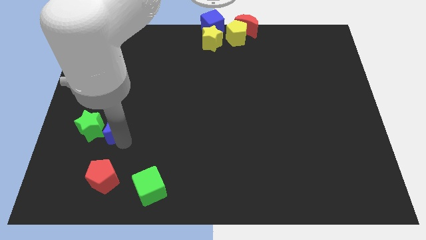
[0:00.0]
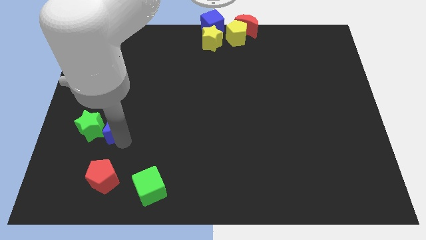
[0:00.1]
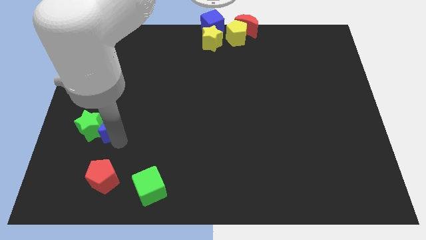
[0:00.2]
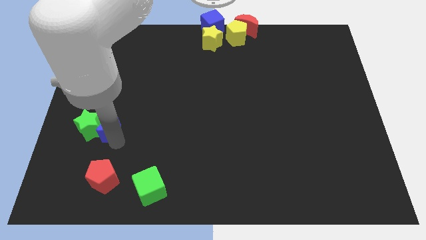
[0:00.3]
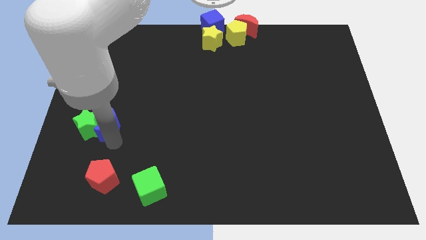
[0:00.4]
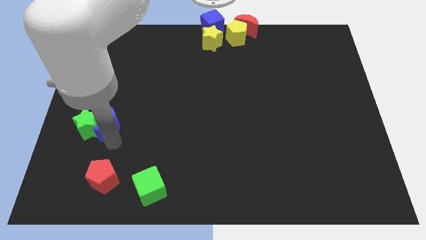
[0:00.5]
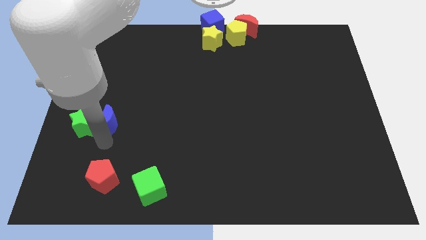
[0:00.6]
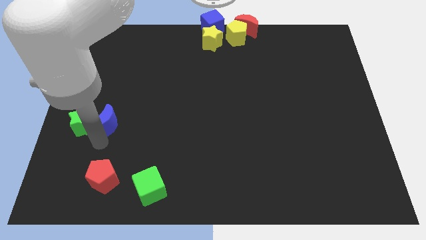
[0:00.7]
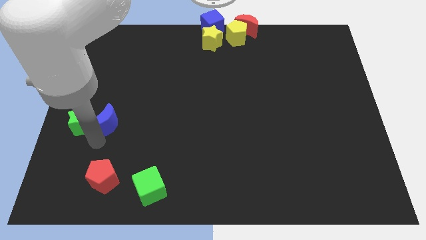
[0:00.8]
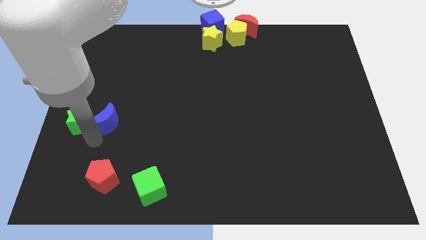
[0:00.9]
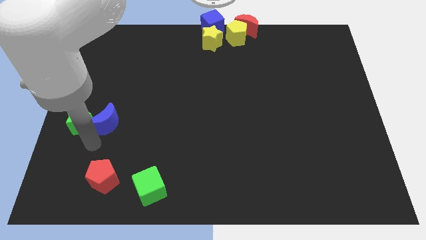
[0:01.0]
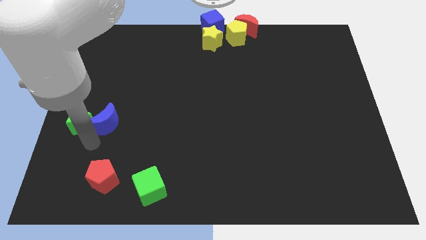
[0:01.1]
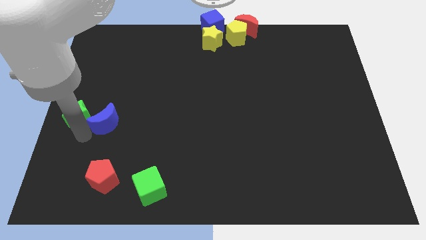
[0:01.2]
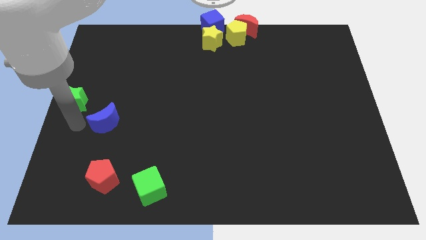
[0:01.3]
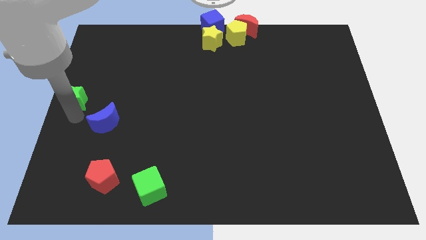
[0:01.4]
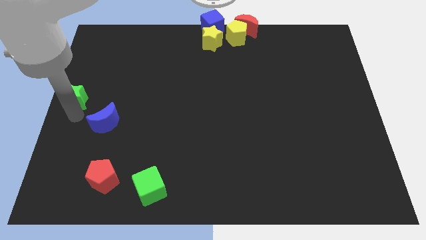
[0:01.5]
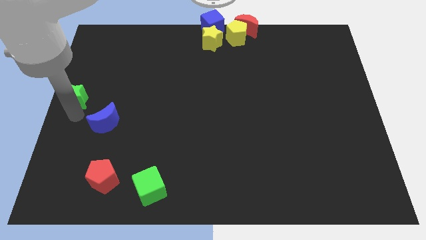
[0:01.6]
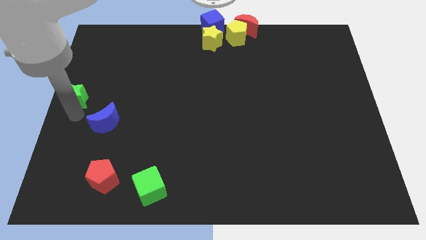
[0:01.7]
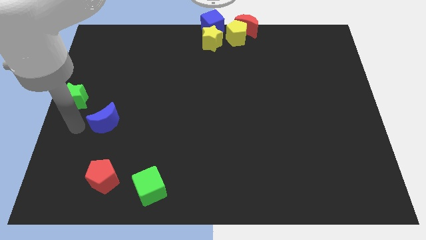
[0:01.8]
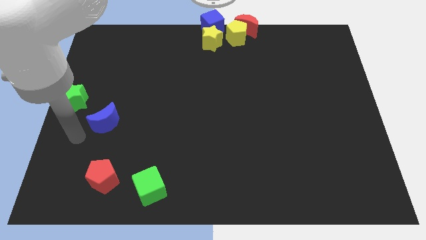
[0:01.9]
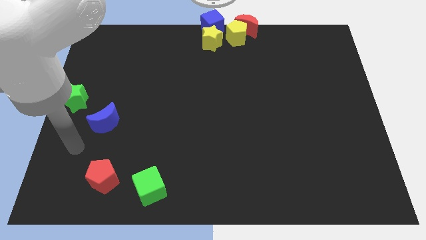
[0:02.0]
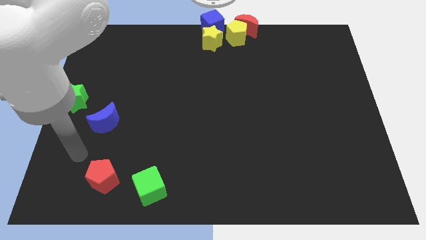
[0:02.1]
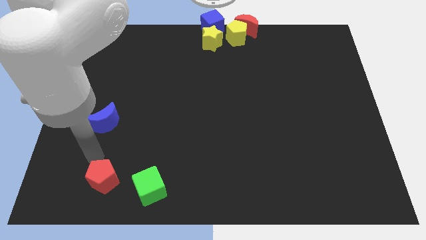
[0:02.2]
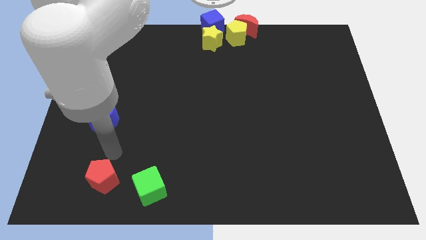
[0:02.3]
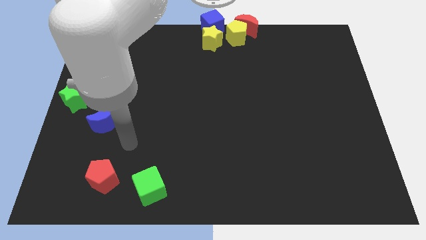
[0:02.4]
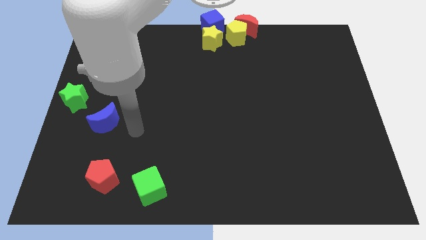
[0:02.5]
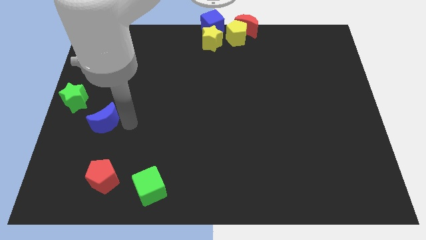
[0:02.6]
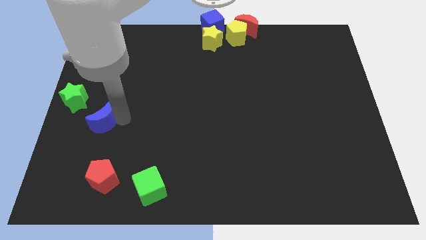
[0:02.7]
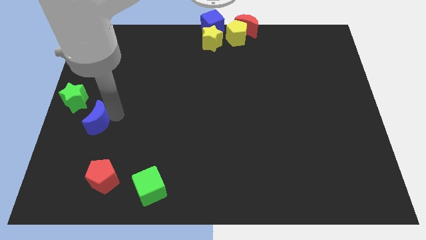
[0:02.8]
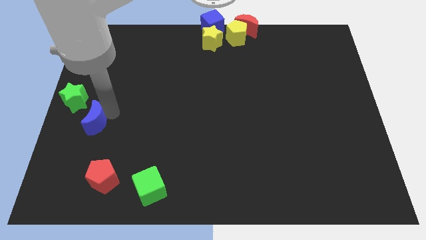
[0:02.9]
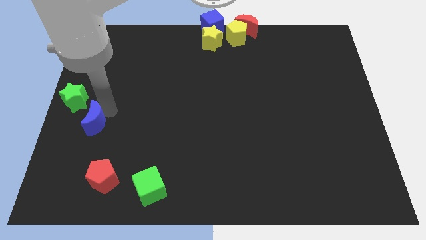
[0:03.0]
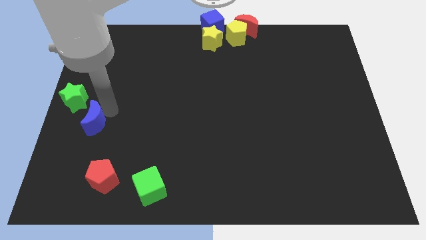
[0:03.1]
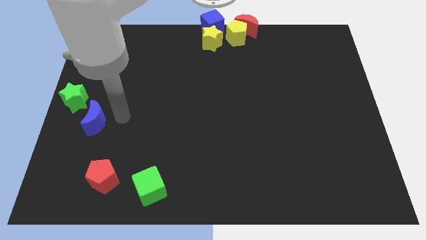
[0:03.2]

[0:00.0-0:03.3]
push the green star and blue moon to the middle left of the board

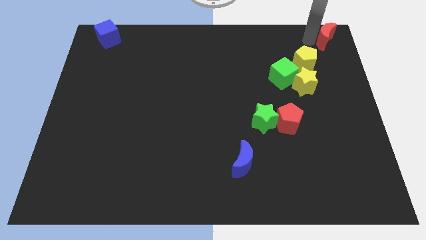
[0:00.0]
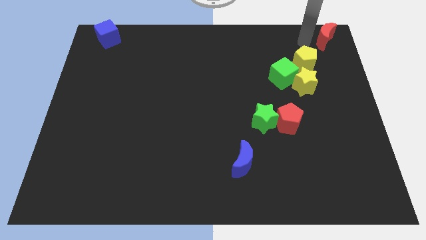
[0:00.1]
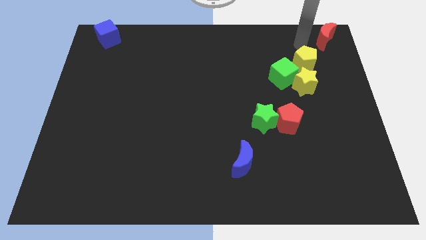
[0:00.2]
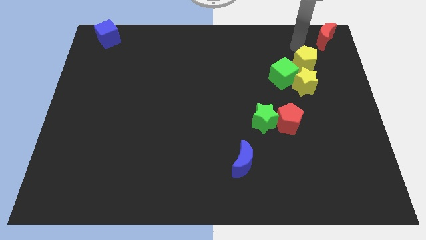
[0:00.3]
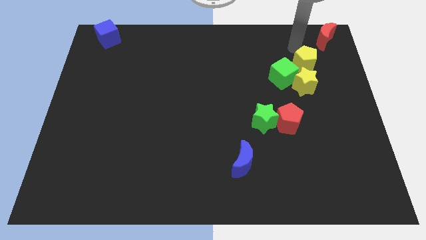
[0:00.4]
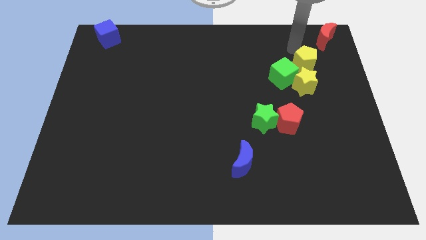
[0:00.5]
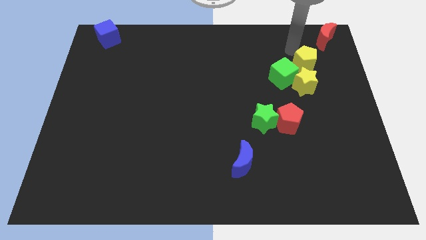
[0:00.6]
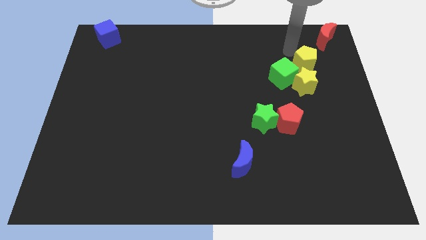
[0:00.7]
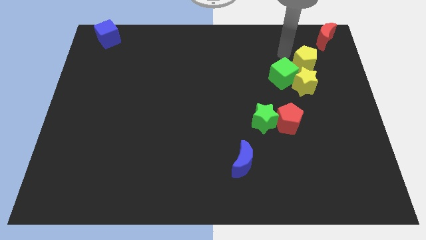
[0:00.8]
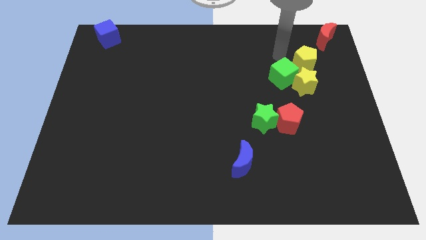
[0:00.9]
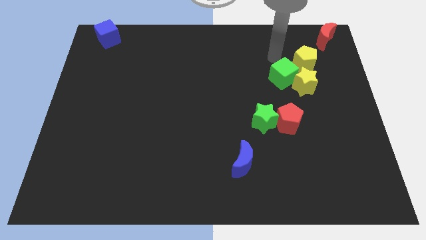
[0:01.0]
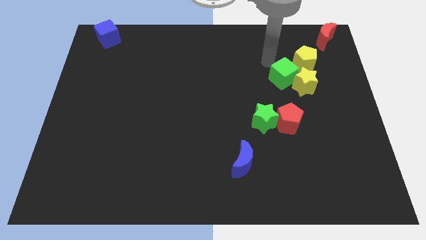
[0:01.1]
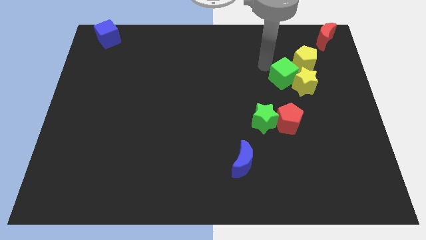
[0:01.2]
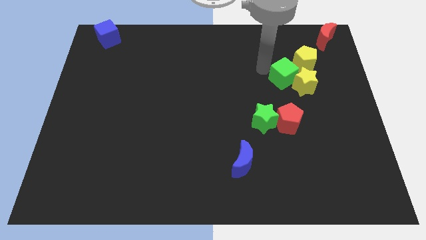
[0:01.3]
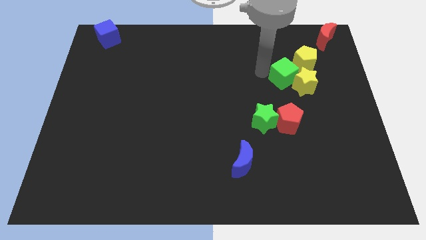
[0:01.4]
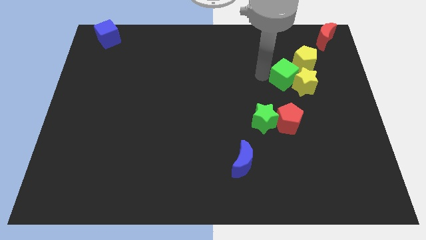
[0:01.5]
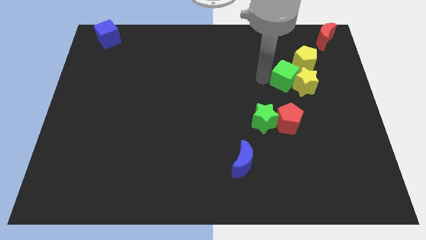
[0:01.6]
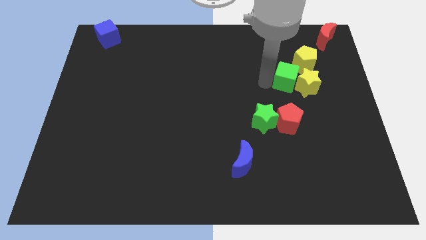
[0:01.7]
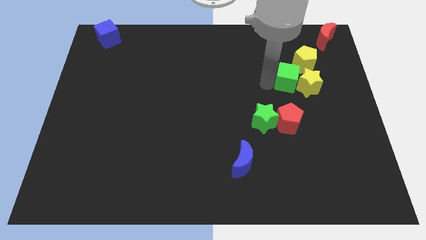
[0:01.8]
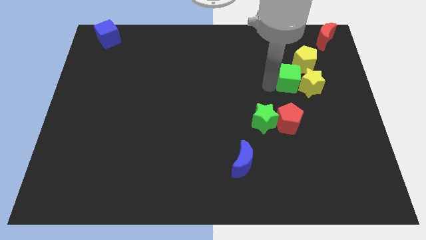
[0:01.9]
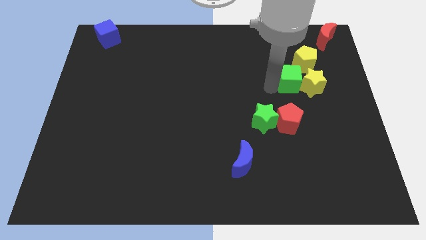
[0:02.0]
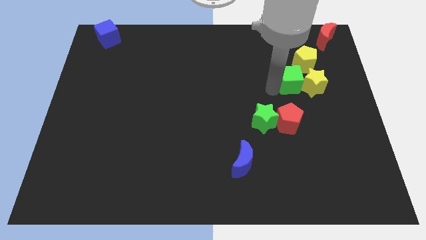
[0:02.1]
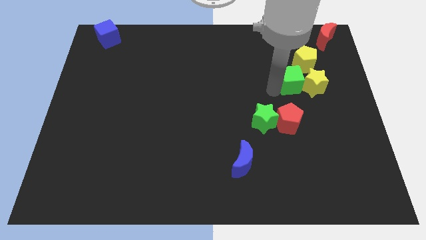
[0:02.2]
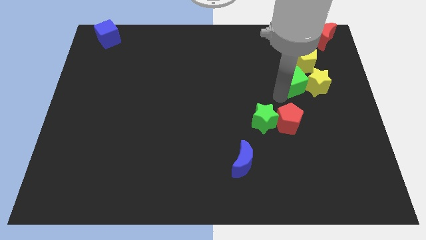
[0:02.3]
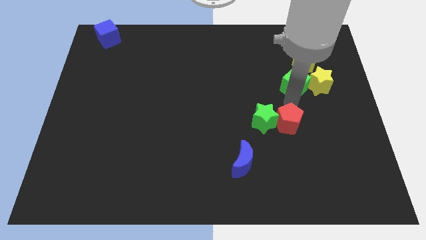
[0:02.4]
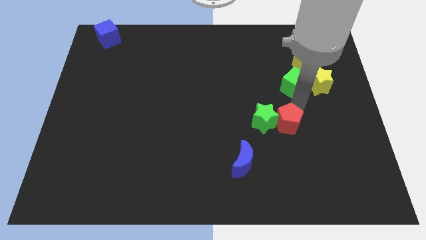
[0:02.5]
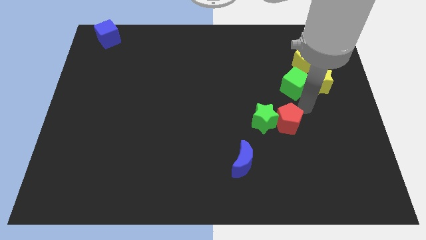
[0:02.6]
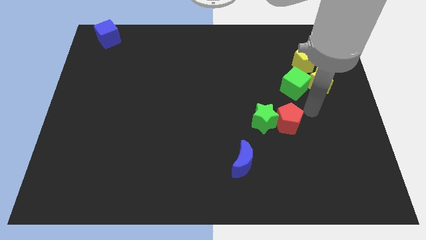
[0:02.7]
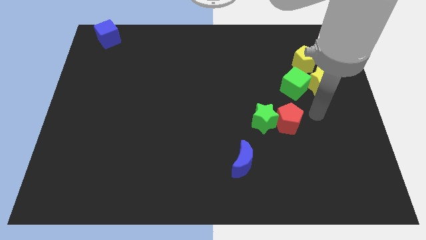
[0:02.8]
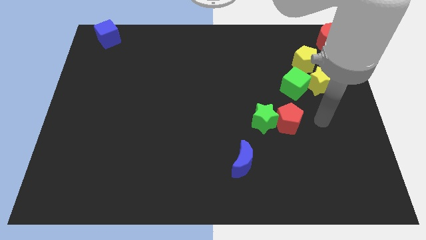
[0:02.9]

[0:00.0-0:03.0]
move the green cube to the bottom side of the yellow pentagon

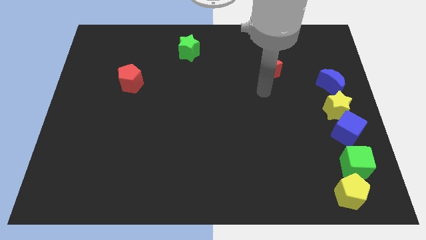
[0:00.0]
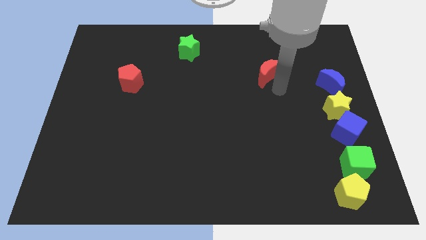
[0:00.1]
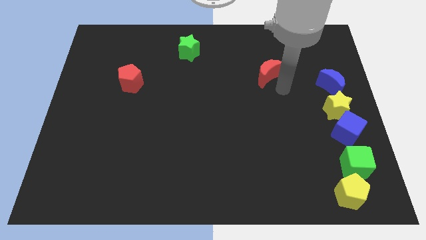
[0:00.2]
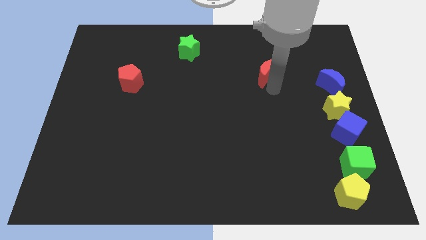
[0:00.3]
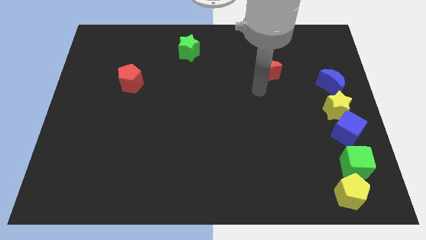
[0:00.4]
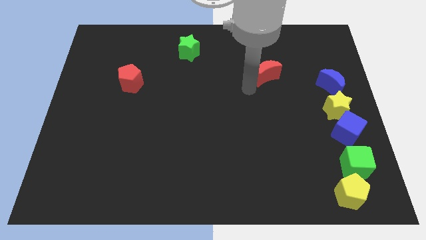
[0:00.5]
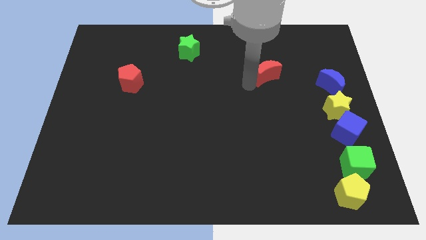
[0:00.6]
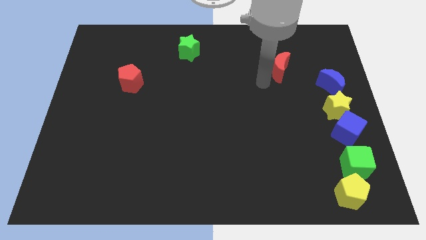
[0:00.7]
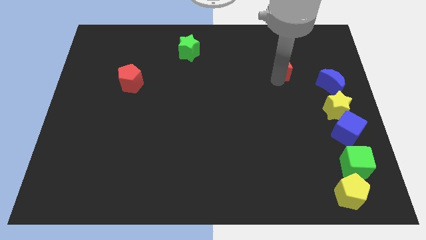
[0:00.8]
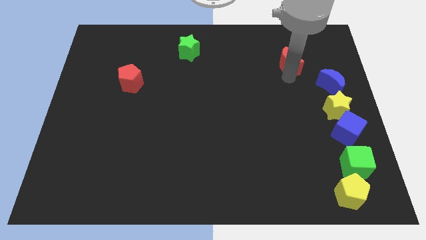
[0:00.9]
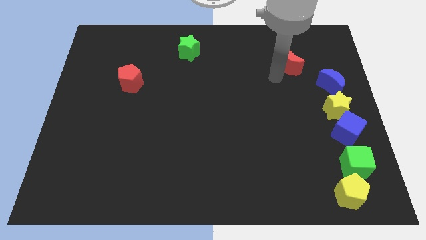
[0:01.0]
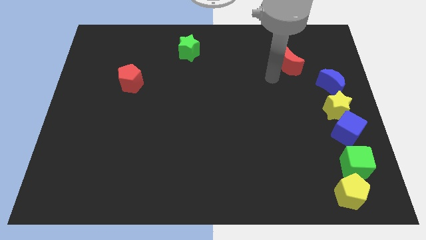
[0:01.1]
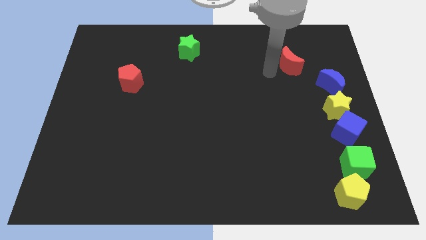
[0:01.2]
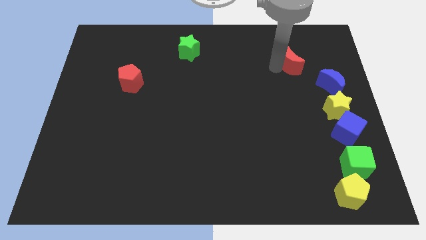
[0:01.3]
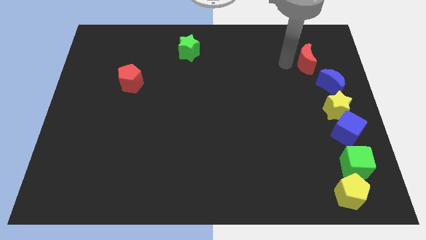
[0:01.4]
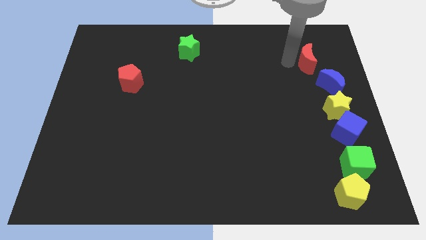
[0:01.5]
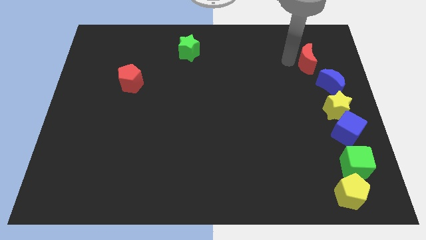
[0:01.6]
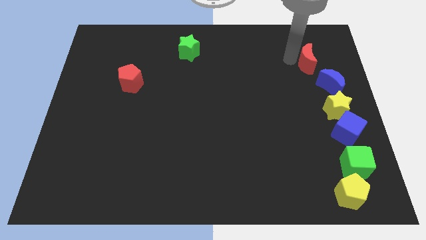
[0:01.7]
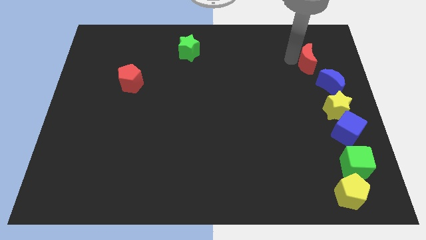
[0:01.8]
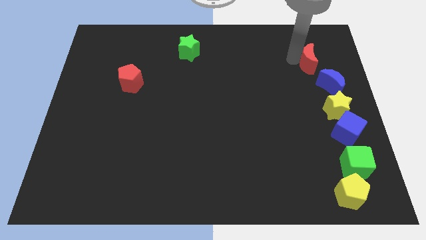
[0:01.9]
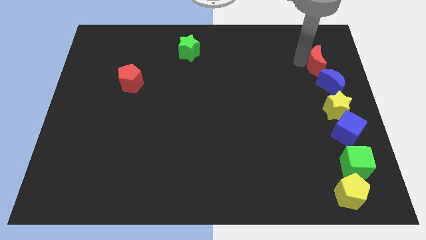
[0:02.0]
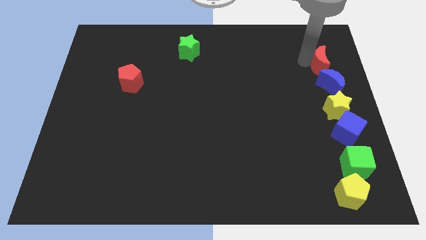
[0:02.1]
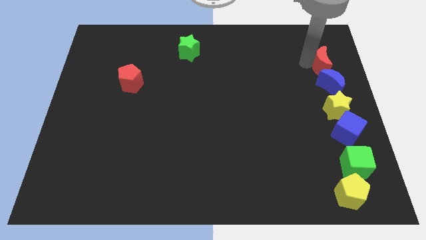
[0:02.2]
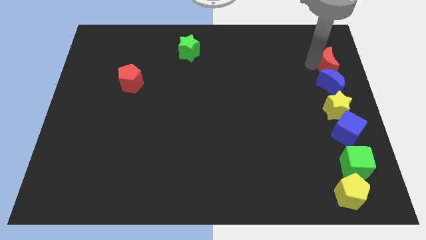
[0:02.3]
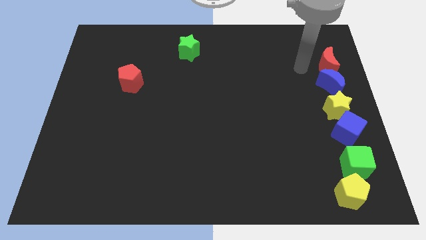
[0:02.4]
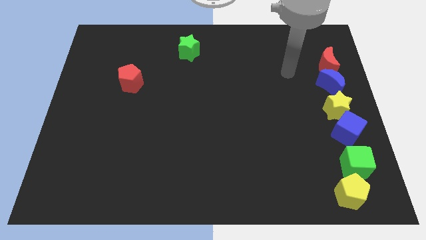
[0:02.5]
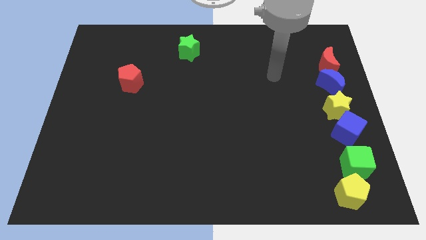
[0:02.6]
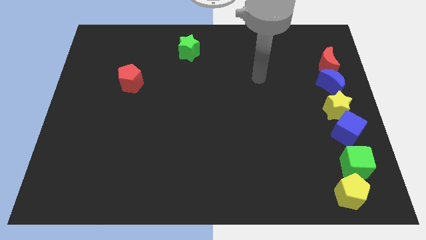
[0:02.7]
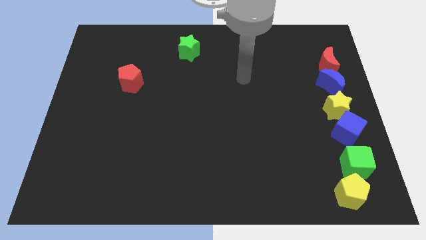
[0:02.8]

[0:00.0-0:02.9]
place the red moon at the top of blue moon
